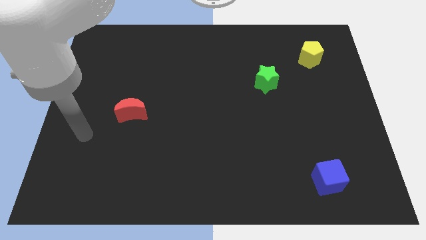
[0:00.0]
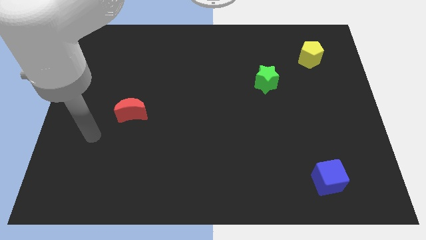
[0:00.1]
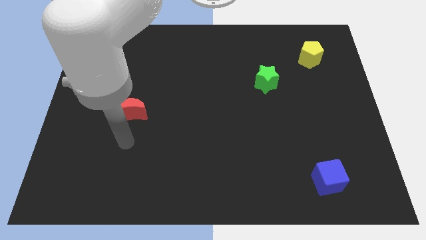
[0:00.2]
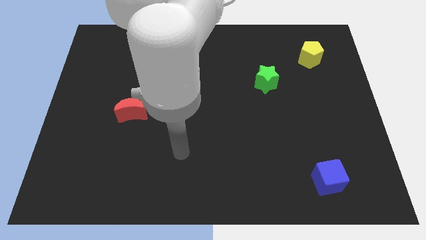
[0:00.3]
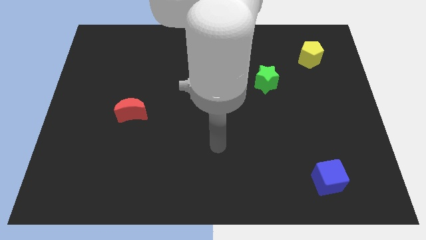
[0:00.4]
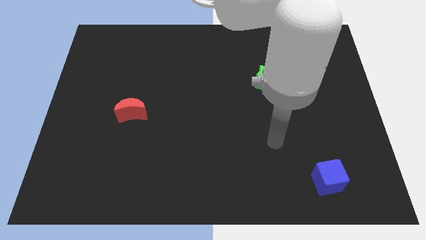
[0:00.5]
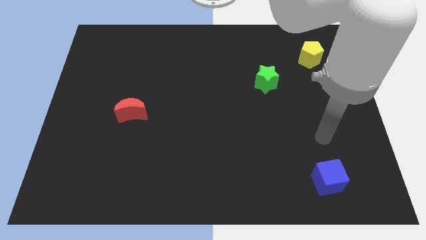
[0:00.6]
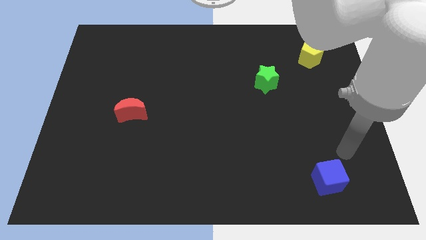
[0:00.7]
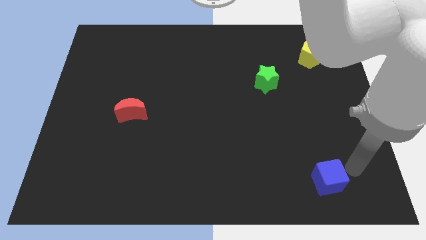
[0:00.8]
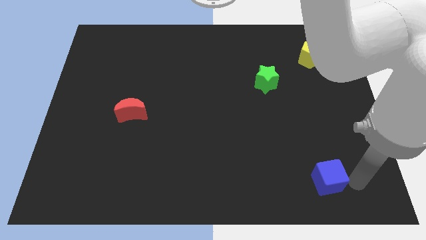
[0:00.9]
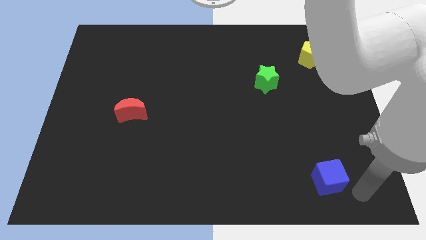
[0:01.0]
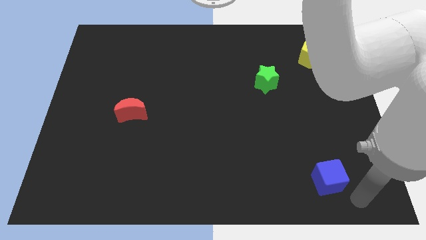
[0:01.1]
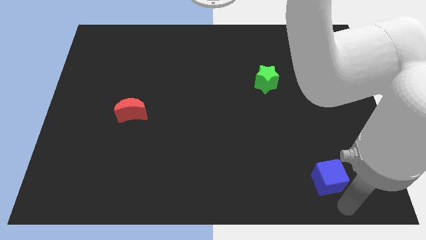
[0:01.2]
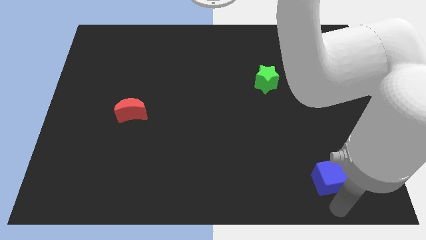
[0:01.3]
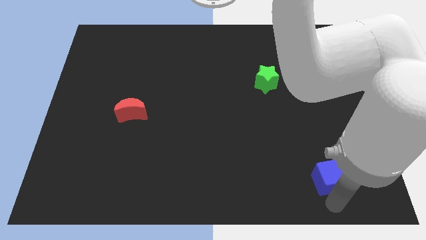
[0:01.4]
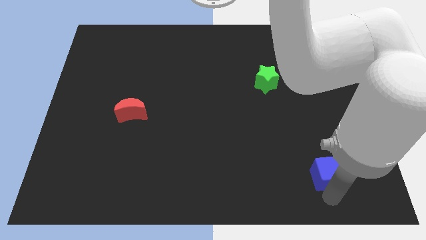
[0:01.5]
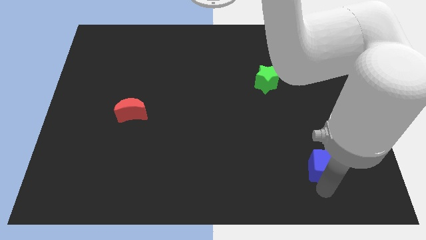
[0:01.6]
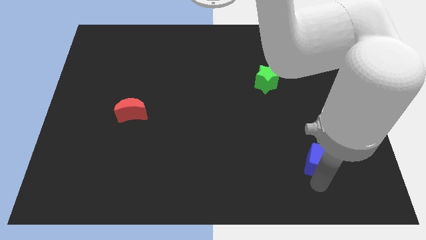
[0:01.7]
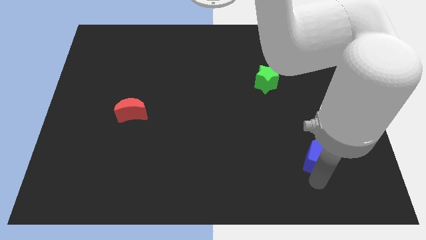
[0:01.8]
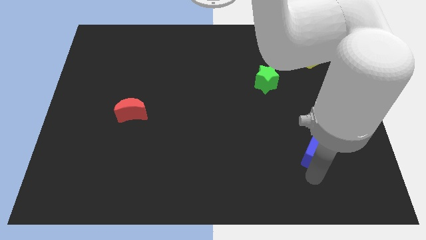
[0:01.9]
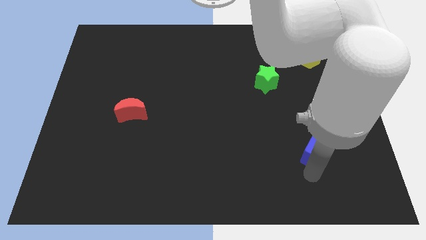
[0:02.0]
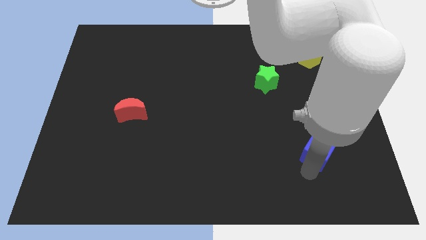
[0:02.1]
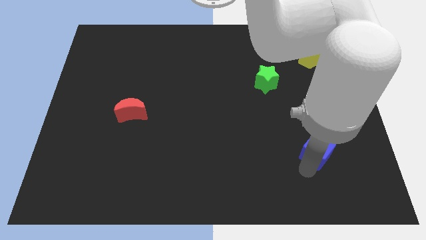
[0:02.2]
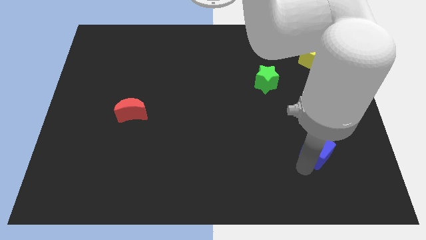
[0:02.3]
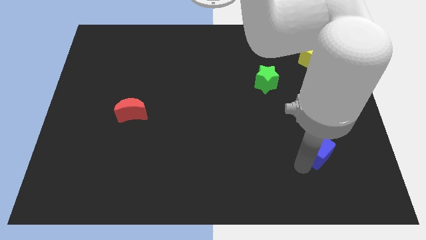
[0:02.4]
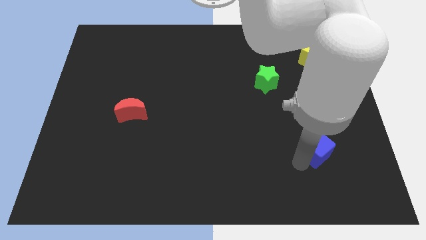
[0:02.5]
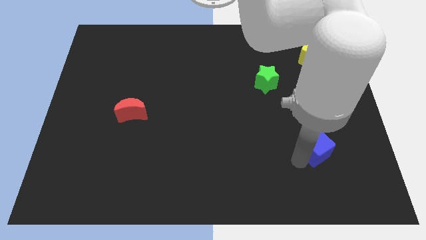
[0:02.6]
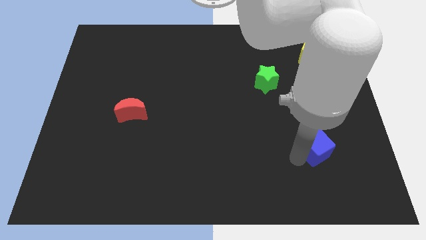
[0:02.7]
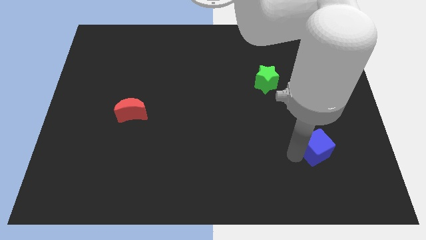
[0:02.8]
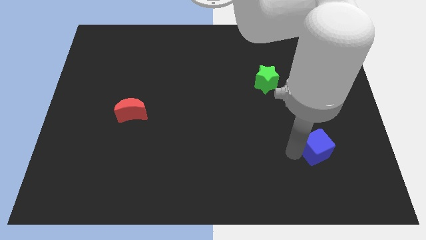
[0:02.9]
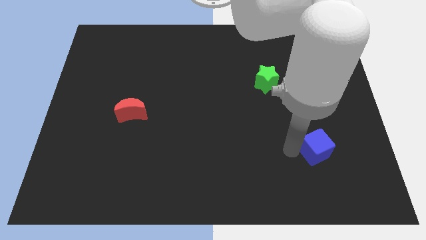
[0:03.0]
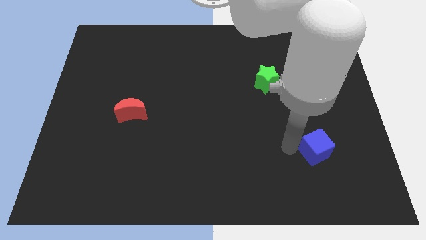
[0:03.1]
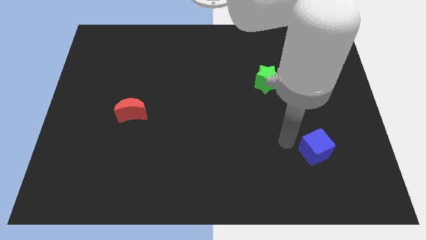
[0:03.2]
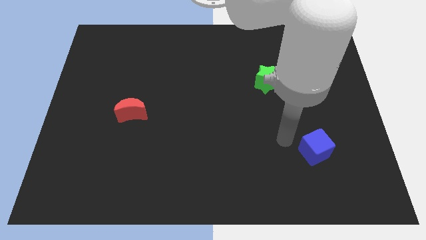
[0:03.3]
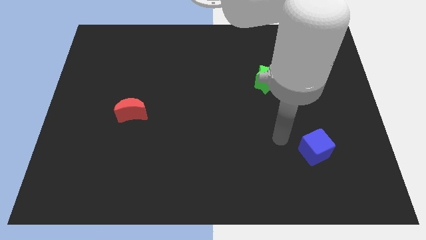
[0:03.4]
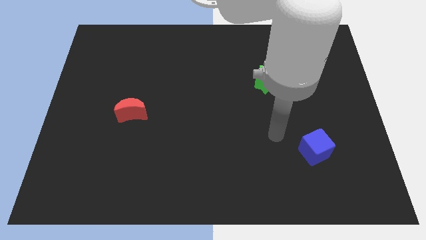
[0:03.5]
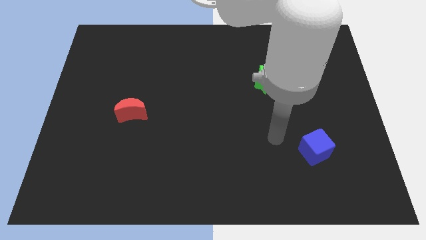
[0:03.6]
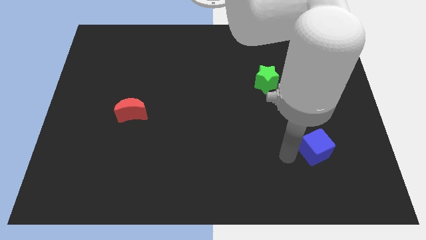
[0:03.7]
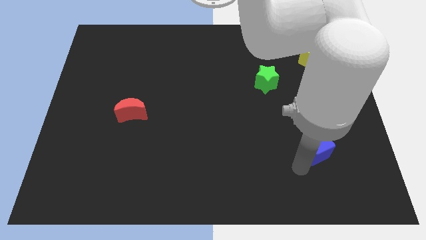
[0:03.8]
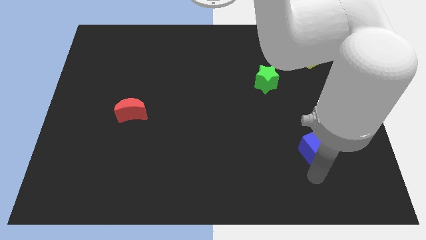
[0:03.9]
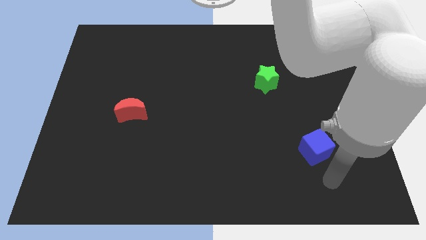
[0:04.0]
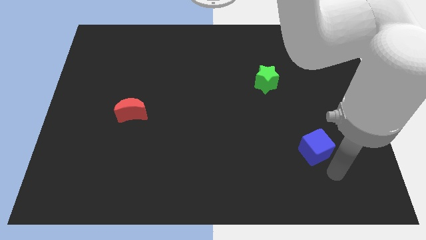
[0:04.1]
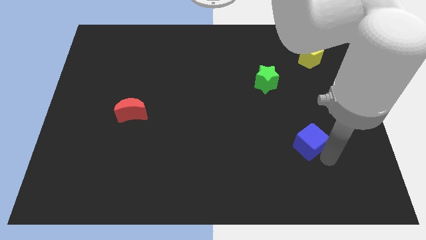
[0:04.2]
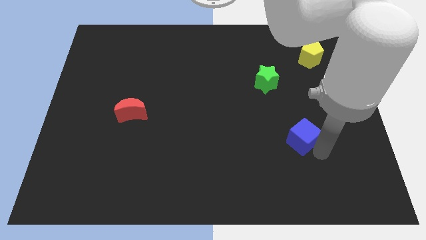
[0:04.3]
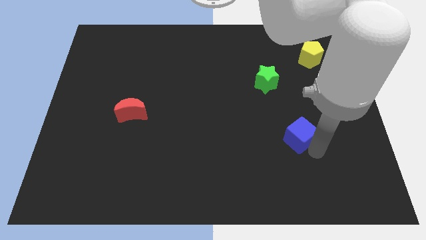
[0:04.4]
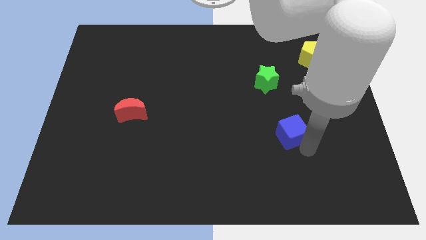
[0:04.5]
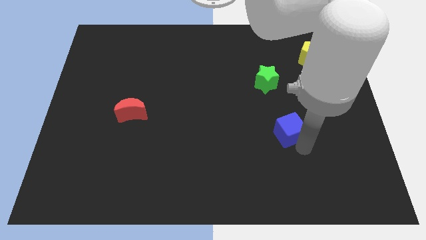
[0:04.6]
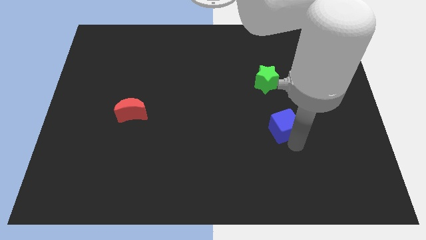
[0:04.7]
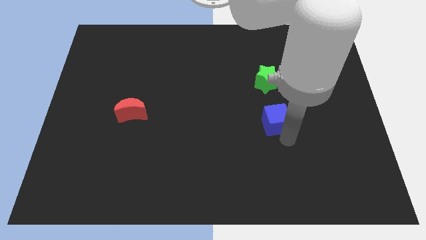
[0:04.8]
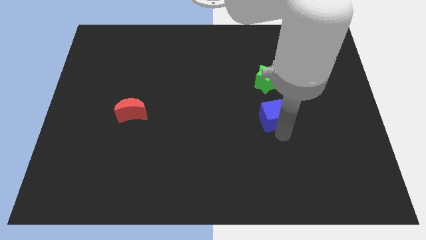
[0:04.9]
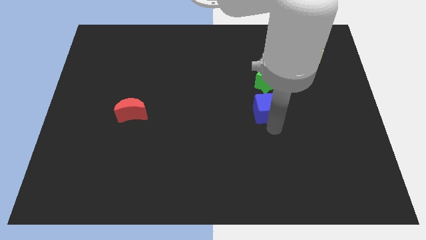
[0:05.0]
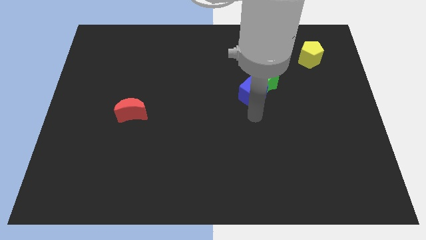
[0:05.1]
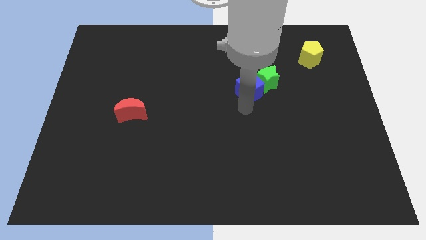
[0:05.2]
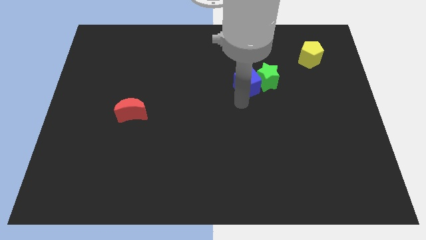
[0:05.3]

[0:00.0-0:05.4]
slide the blue cube towards the star

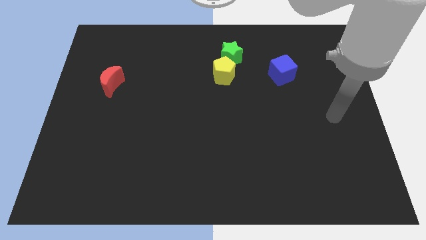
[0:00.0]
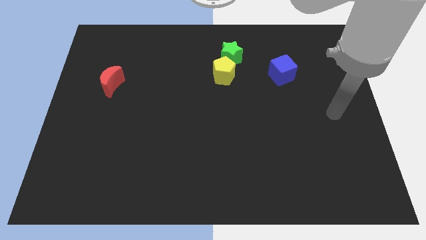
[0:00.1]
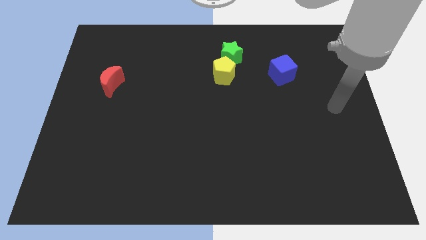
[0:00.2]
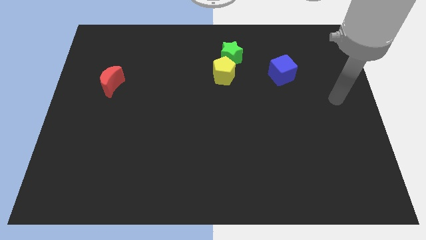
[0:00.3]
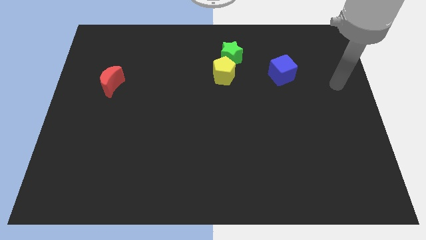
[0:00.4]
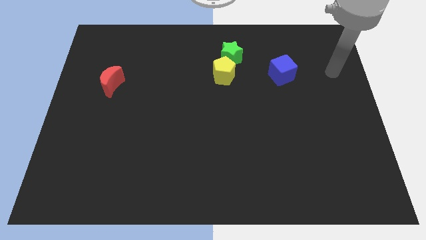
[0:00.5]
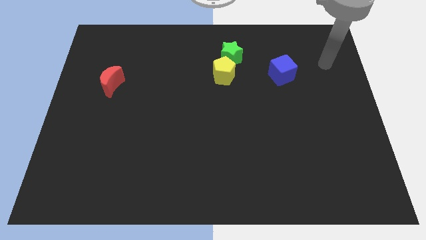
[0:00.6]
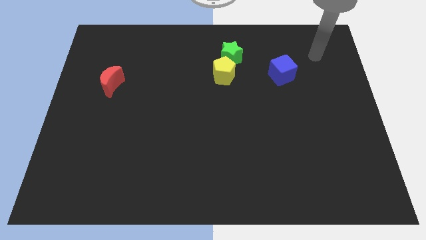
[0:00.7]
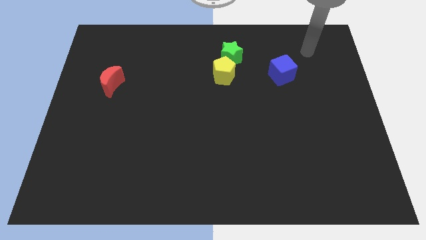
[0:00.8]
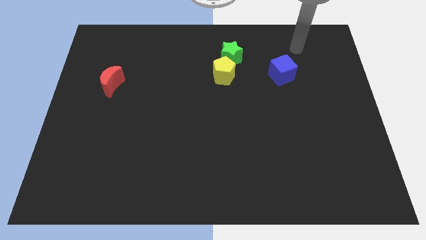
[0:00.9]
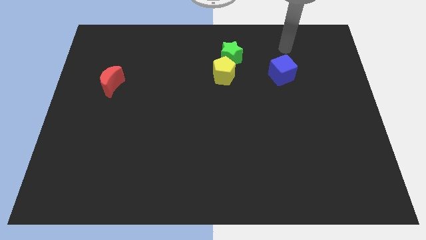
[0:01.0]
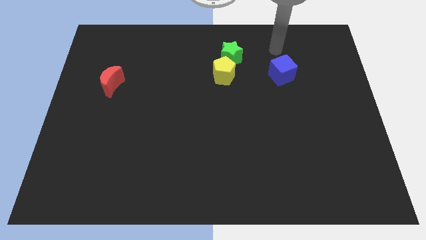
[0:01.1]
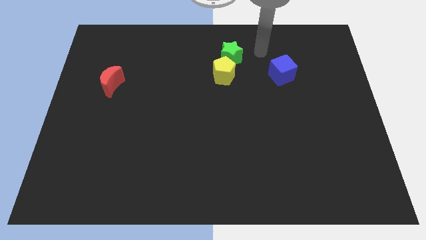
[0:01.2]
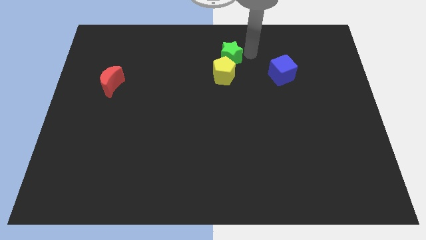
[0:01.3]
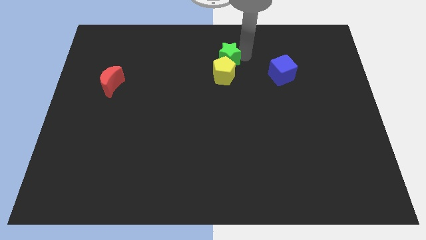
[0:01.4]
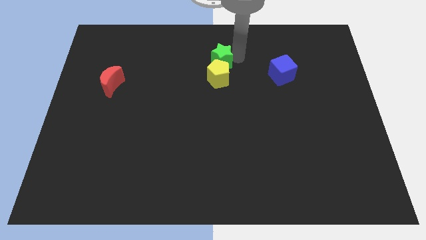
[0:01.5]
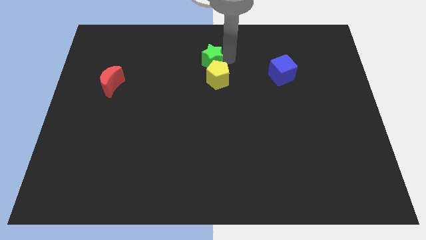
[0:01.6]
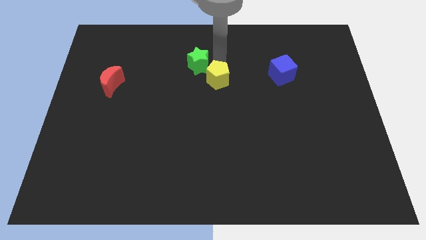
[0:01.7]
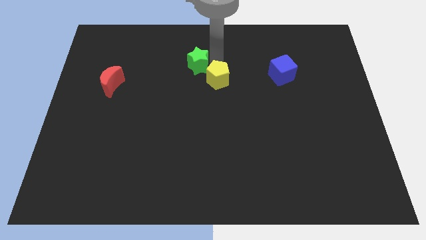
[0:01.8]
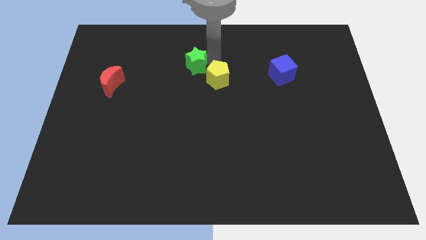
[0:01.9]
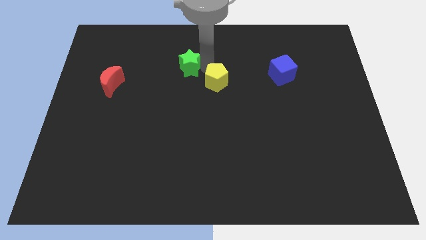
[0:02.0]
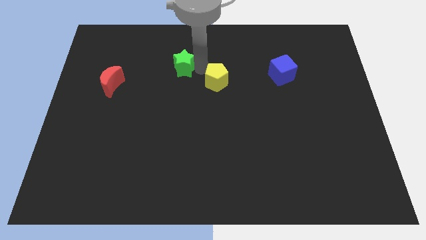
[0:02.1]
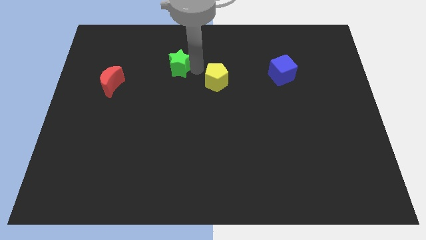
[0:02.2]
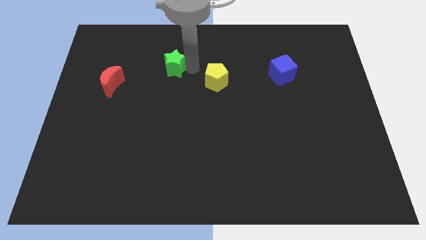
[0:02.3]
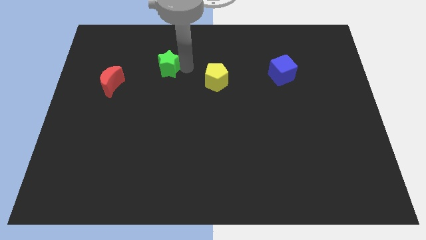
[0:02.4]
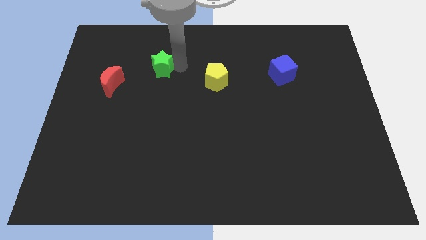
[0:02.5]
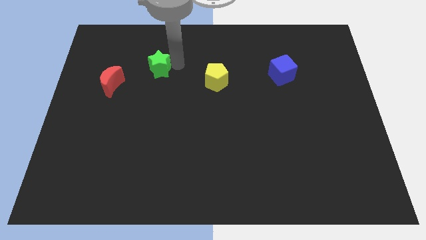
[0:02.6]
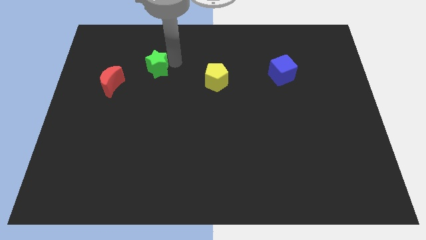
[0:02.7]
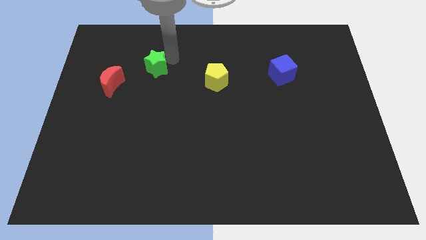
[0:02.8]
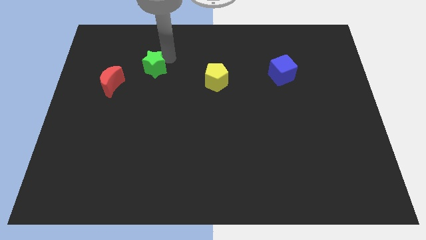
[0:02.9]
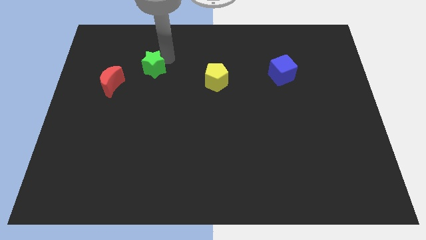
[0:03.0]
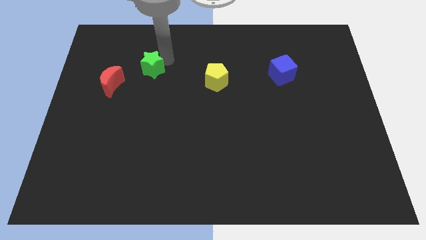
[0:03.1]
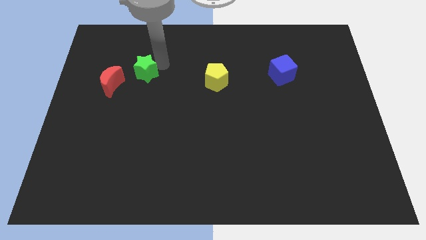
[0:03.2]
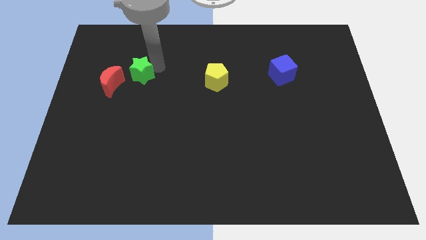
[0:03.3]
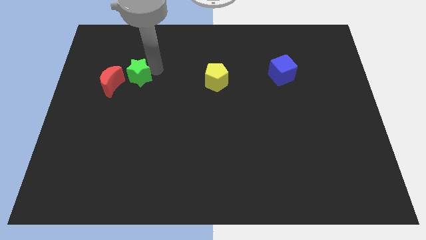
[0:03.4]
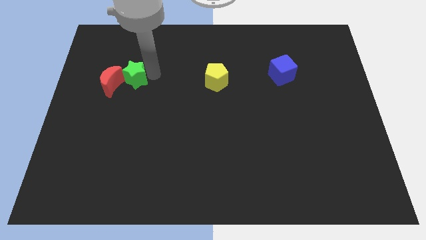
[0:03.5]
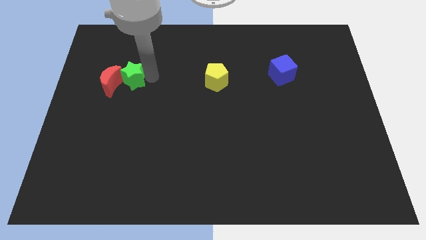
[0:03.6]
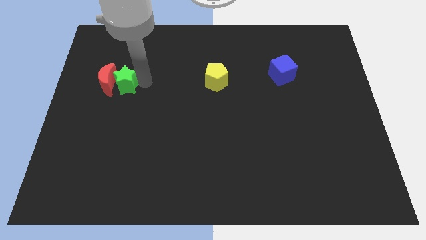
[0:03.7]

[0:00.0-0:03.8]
push the green star next to the red moon
